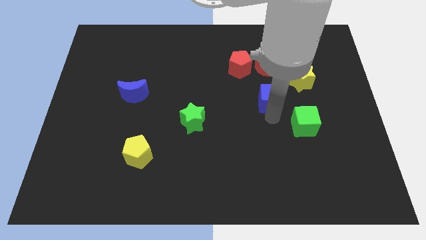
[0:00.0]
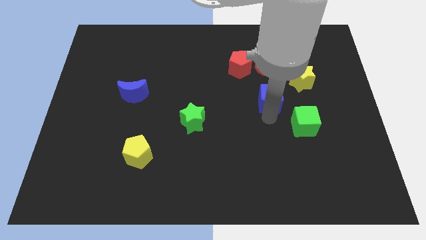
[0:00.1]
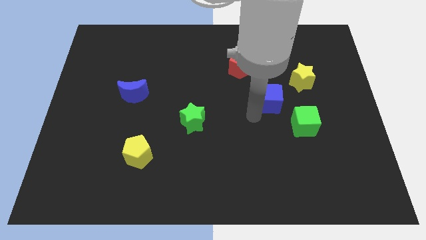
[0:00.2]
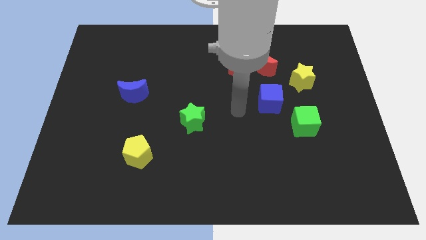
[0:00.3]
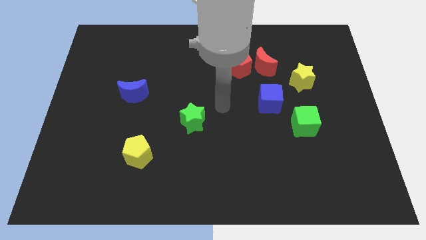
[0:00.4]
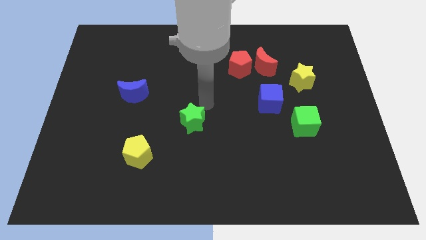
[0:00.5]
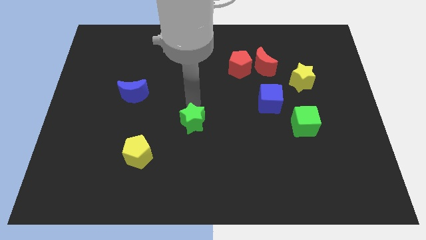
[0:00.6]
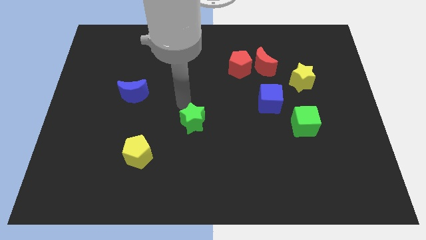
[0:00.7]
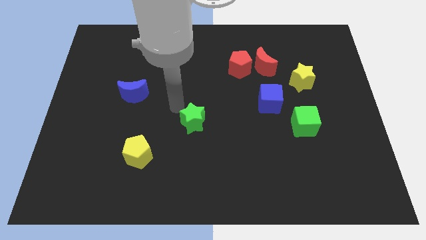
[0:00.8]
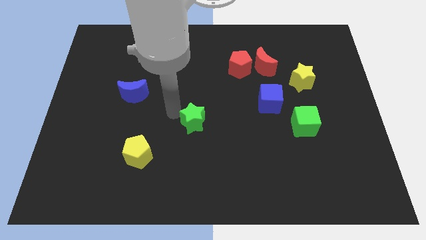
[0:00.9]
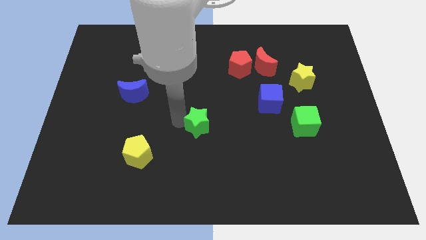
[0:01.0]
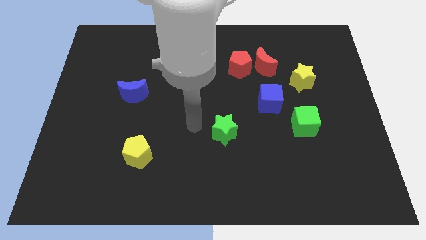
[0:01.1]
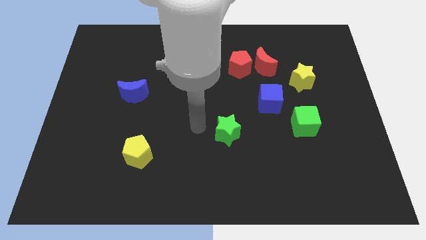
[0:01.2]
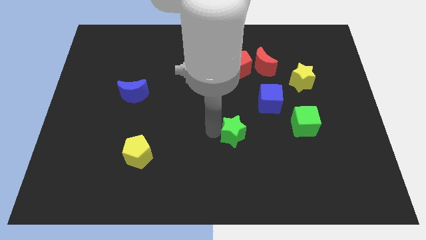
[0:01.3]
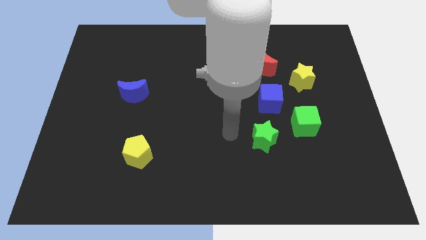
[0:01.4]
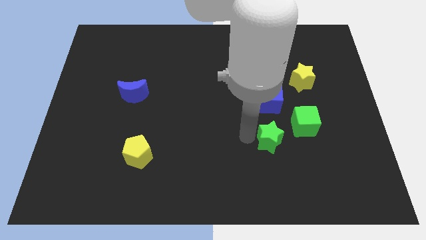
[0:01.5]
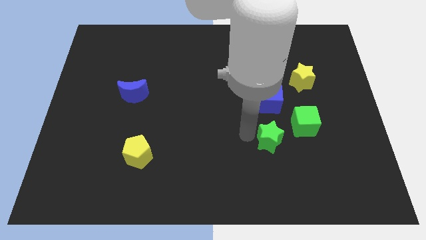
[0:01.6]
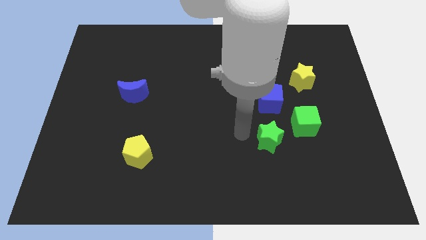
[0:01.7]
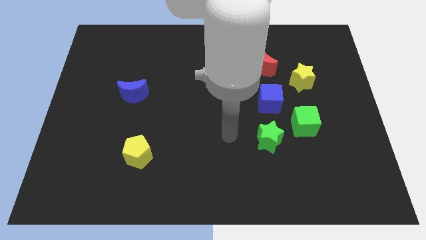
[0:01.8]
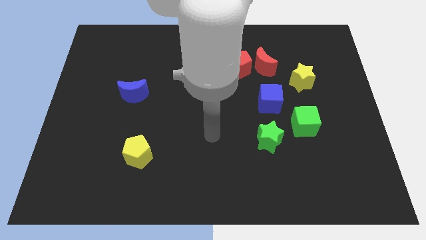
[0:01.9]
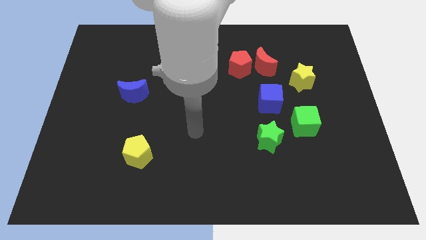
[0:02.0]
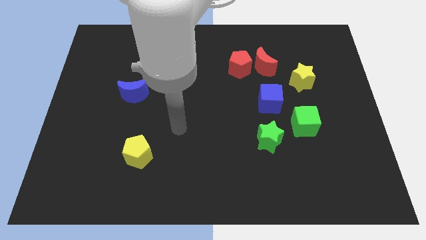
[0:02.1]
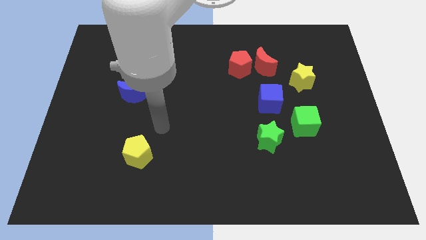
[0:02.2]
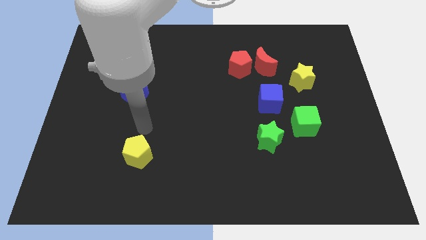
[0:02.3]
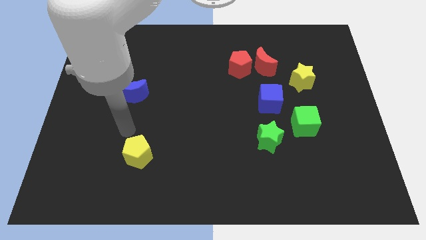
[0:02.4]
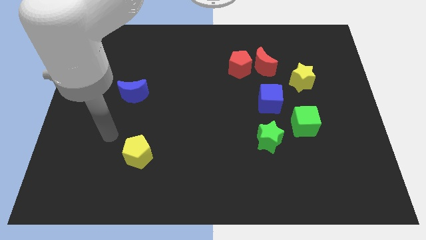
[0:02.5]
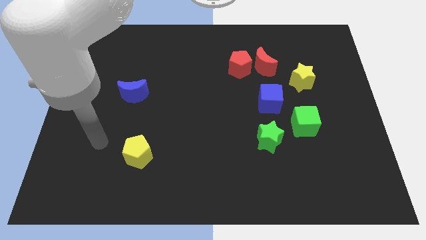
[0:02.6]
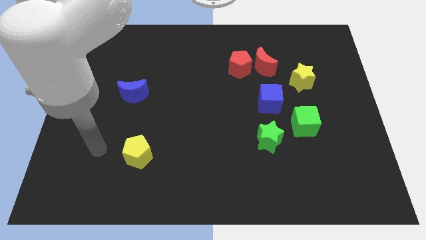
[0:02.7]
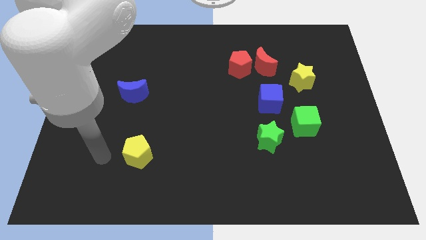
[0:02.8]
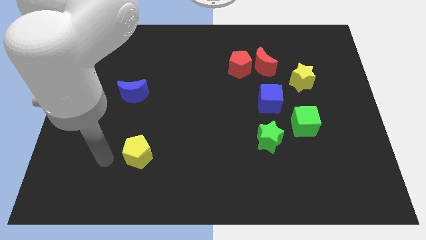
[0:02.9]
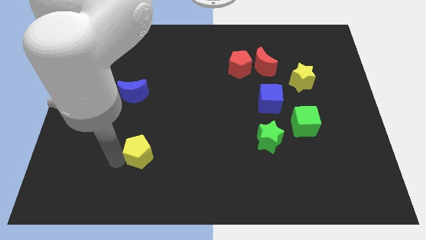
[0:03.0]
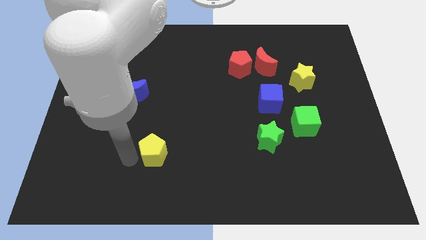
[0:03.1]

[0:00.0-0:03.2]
slide the green star vertically below the blue cube

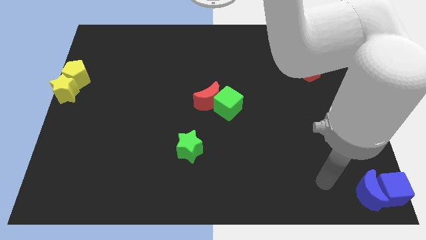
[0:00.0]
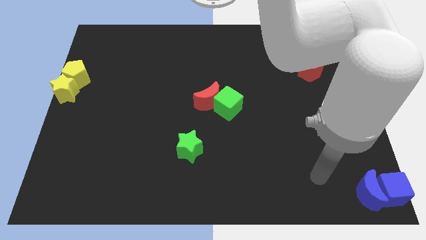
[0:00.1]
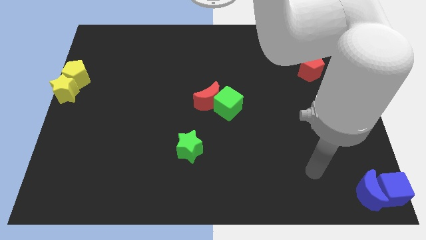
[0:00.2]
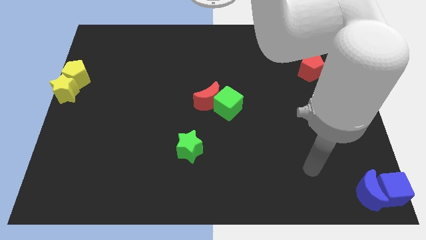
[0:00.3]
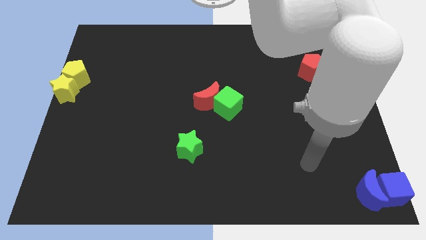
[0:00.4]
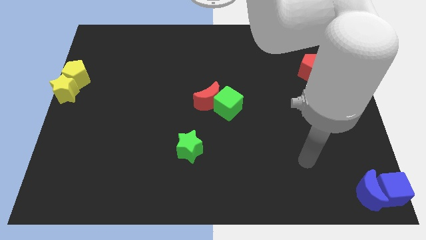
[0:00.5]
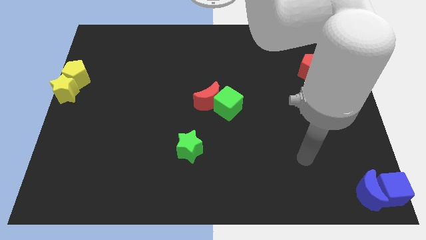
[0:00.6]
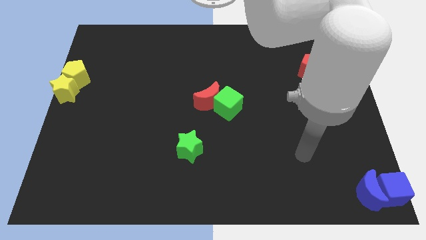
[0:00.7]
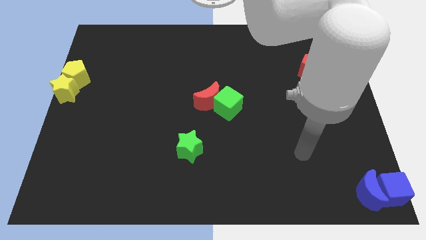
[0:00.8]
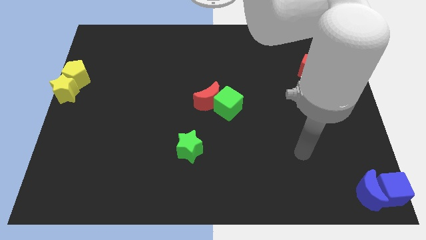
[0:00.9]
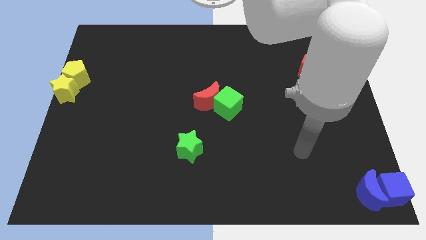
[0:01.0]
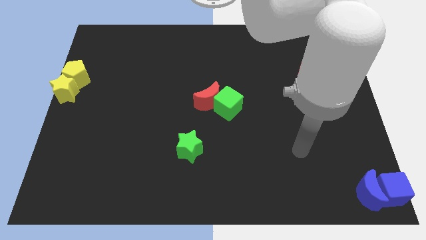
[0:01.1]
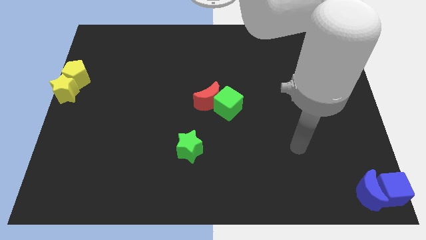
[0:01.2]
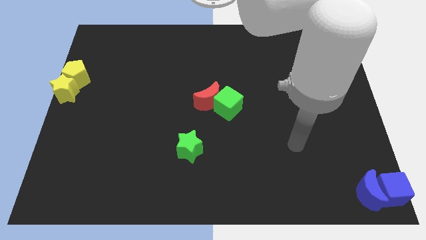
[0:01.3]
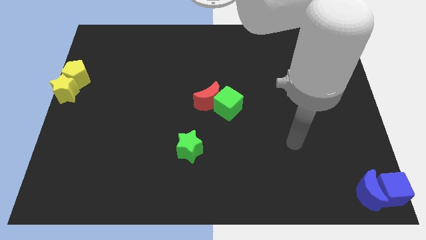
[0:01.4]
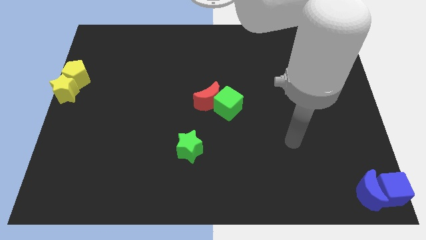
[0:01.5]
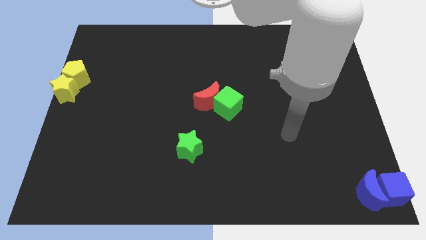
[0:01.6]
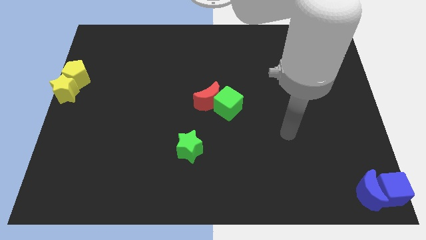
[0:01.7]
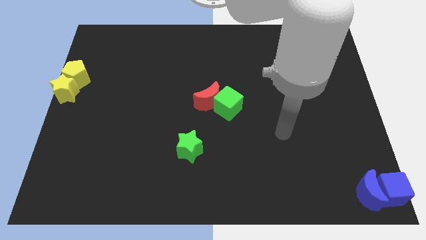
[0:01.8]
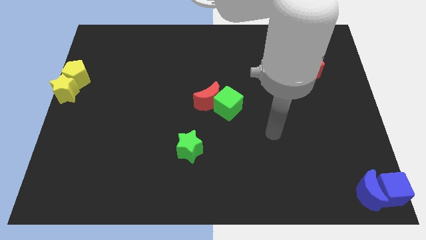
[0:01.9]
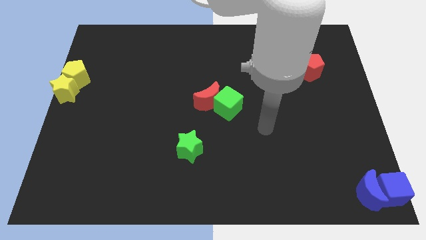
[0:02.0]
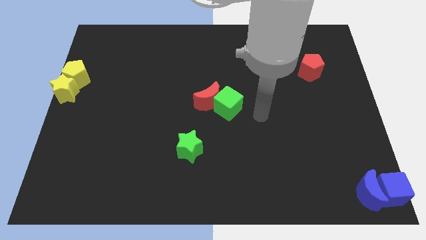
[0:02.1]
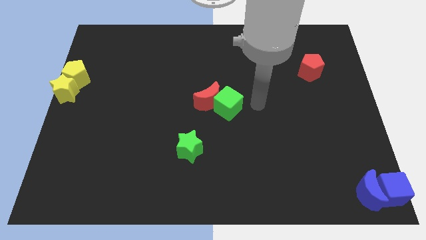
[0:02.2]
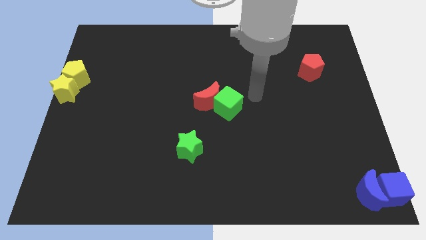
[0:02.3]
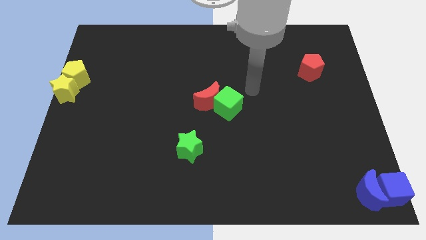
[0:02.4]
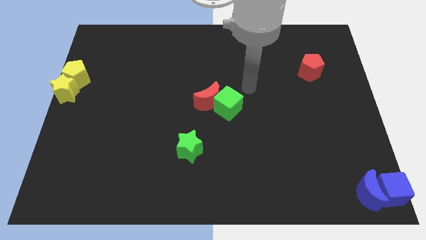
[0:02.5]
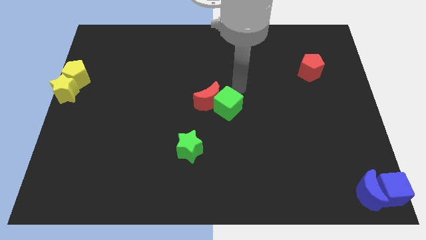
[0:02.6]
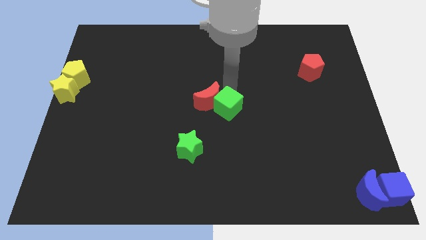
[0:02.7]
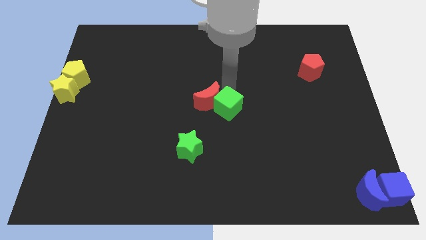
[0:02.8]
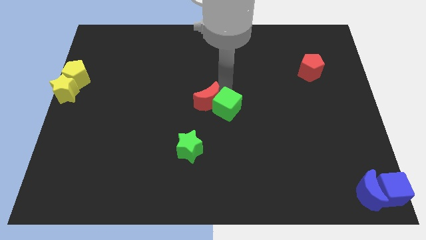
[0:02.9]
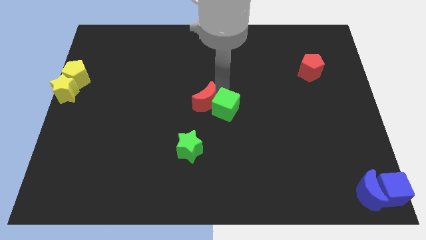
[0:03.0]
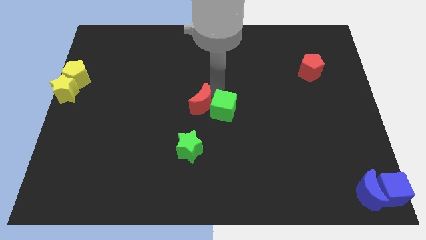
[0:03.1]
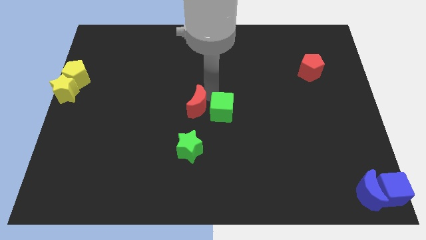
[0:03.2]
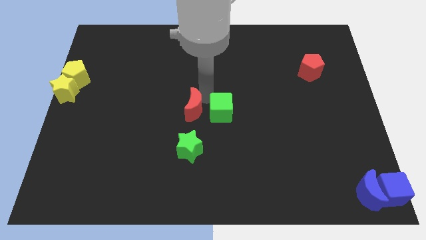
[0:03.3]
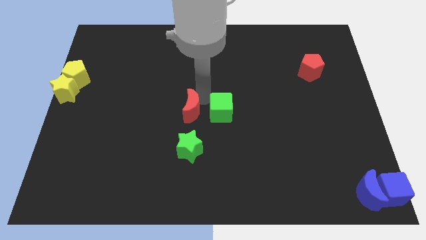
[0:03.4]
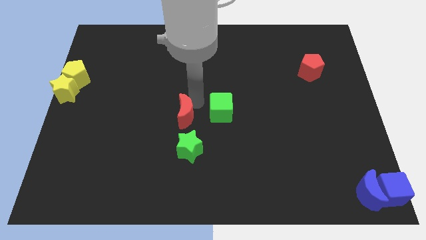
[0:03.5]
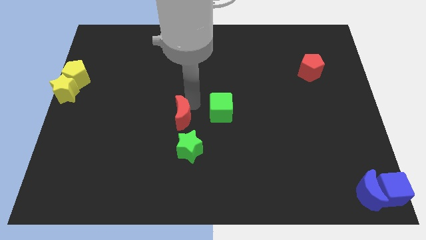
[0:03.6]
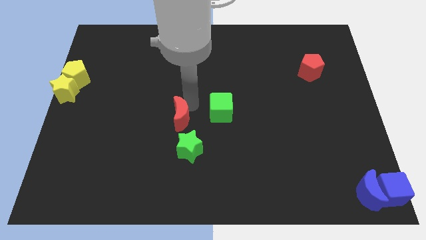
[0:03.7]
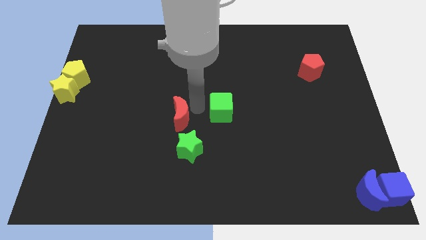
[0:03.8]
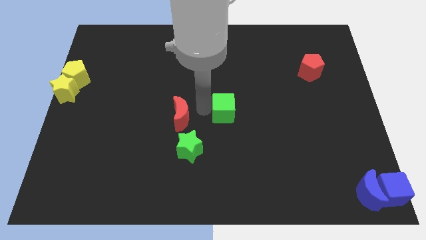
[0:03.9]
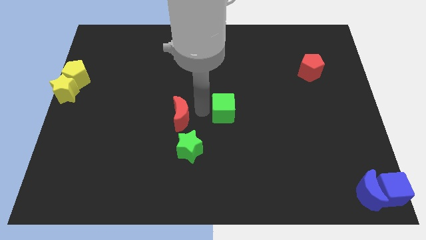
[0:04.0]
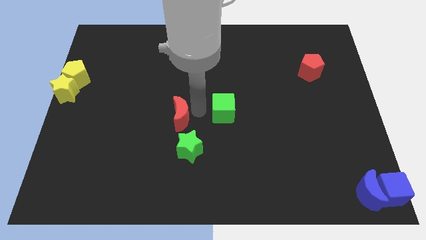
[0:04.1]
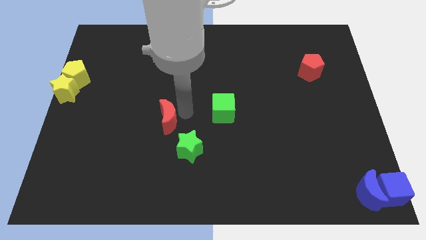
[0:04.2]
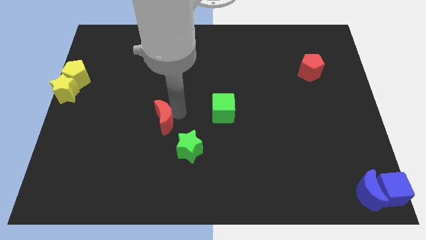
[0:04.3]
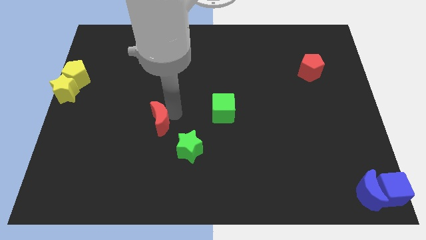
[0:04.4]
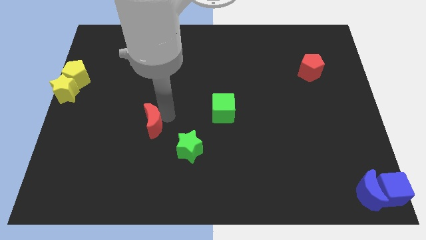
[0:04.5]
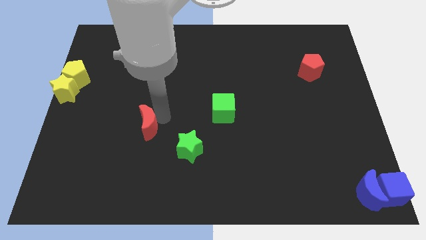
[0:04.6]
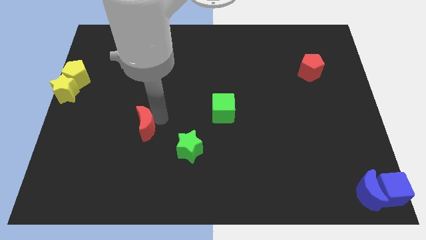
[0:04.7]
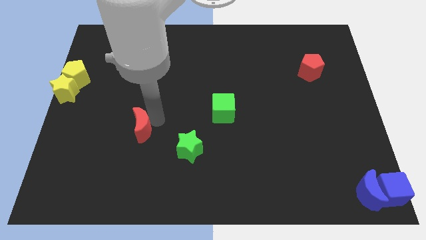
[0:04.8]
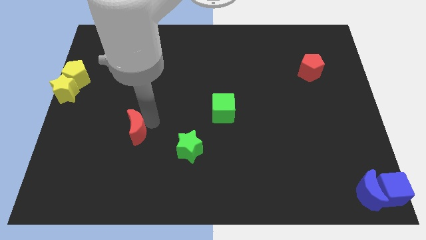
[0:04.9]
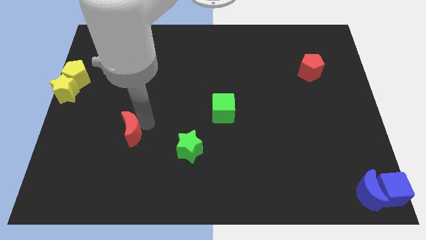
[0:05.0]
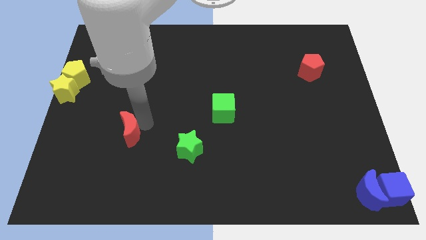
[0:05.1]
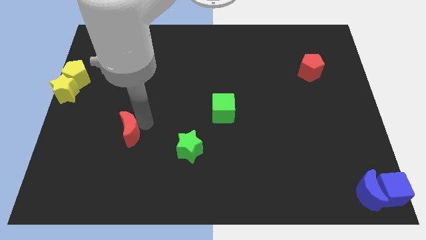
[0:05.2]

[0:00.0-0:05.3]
separate the red crescent from the green cube

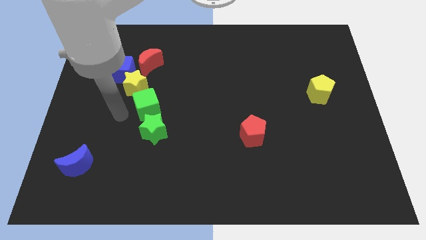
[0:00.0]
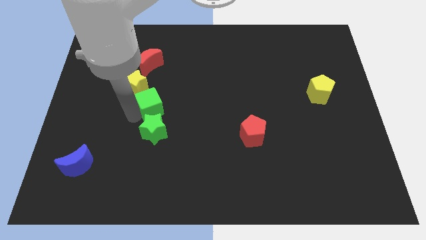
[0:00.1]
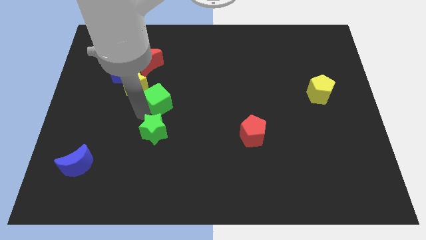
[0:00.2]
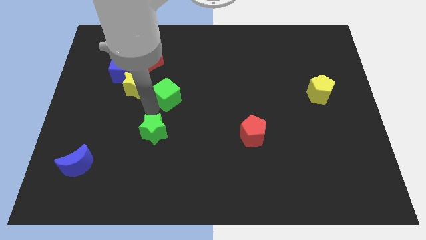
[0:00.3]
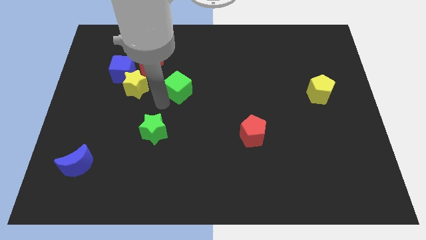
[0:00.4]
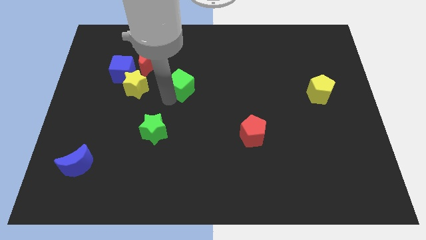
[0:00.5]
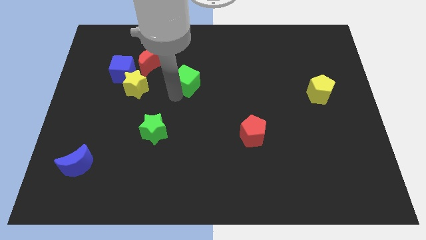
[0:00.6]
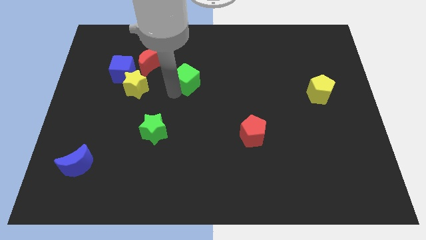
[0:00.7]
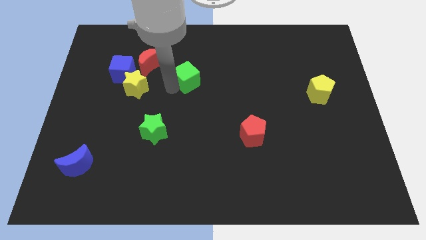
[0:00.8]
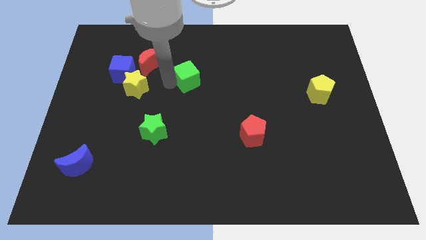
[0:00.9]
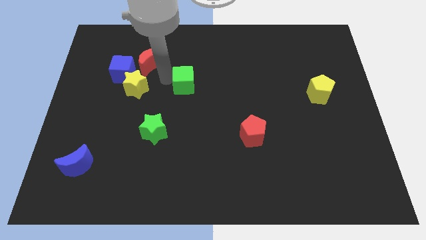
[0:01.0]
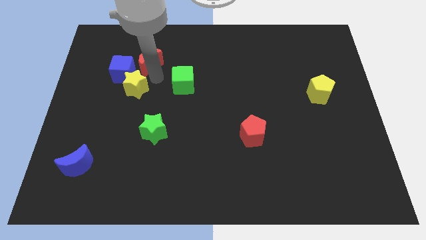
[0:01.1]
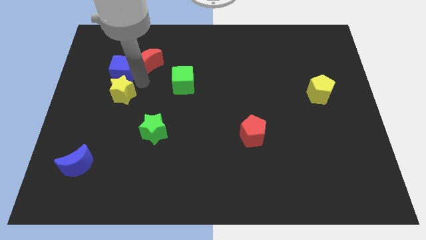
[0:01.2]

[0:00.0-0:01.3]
place green cube right to the yellow star
